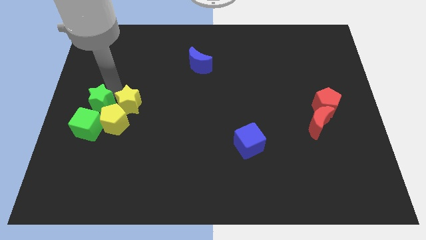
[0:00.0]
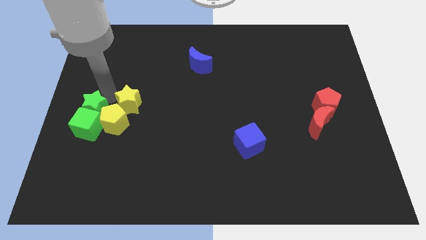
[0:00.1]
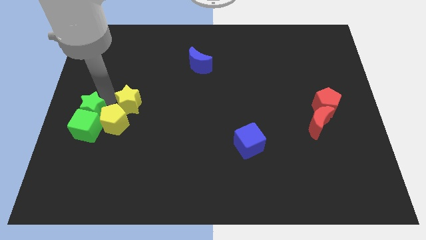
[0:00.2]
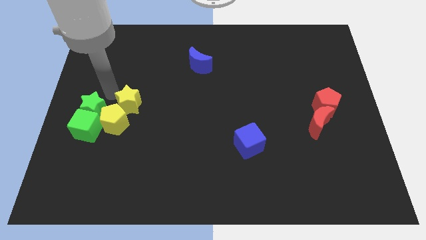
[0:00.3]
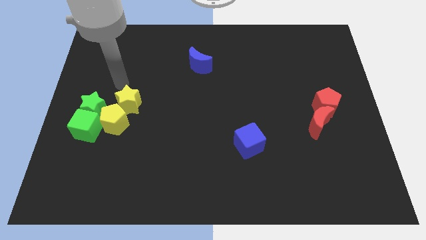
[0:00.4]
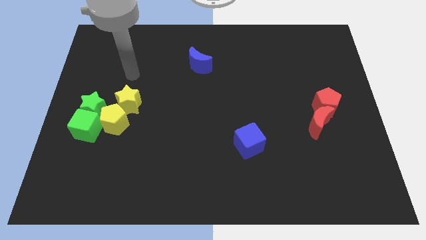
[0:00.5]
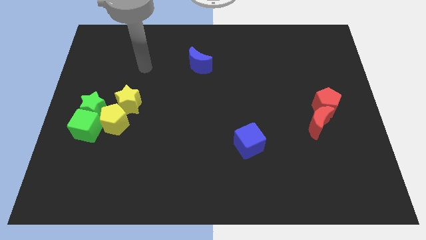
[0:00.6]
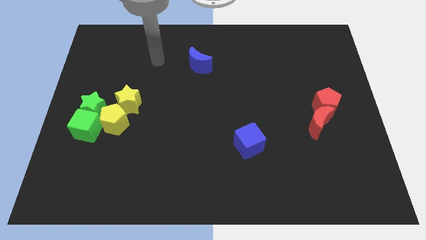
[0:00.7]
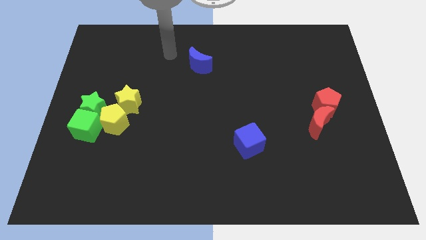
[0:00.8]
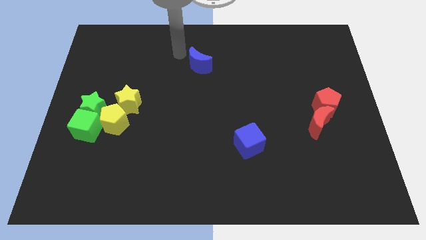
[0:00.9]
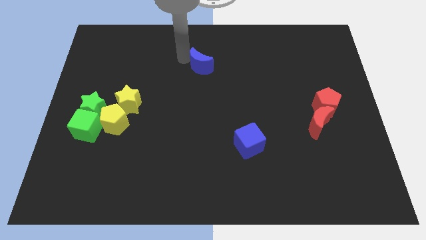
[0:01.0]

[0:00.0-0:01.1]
move your hand away from green star

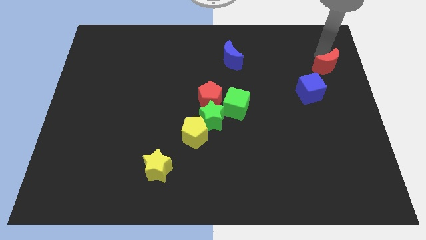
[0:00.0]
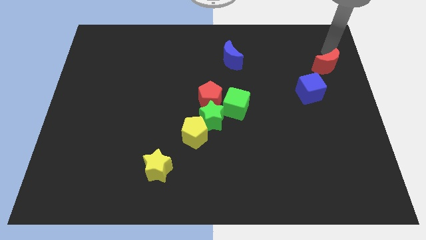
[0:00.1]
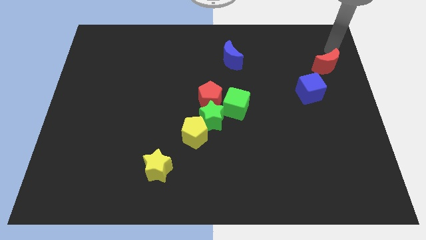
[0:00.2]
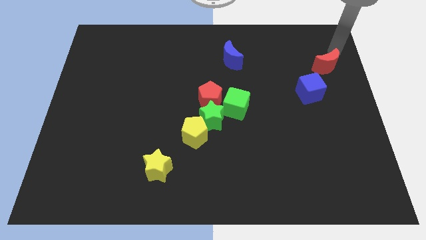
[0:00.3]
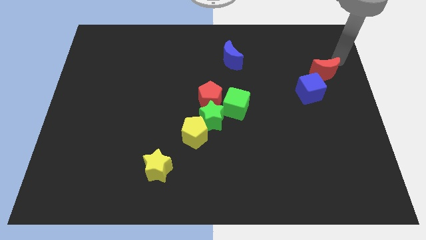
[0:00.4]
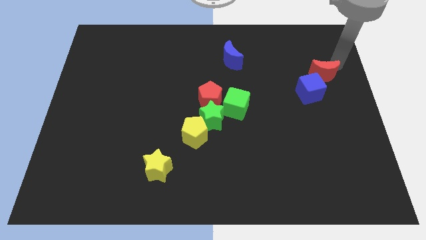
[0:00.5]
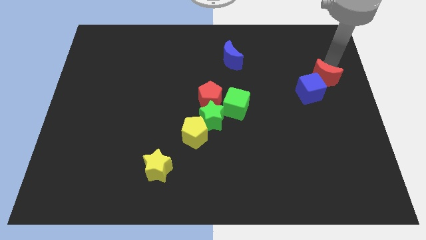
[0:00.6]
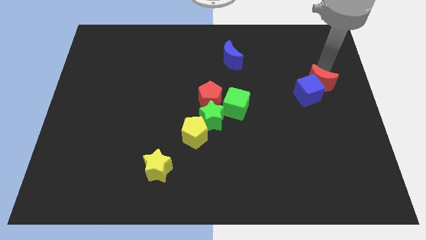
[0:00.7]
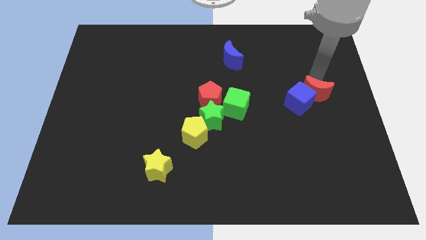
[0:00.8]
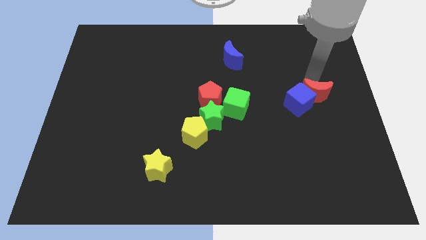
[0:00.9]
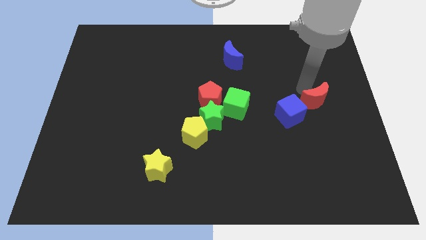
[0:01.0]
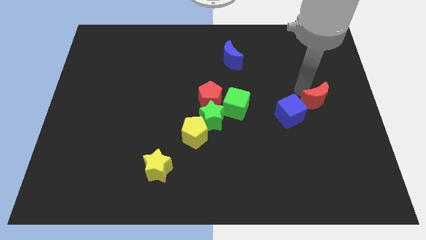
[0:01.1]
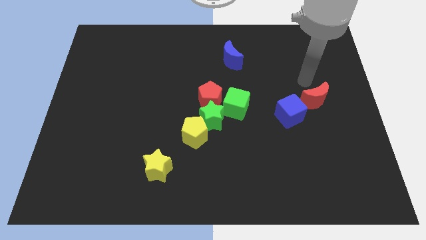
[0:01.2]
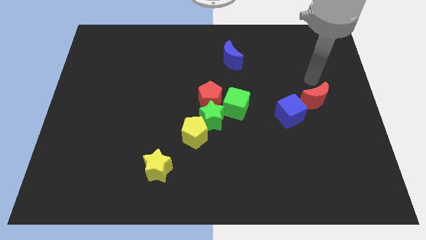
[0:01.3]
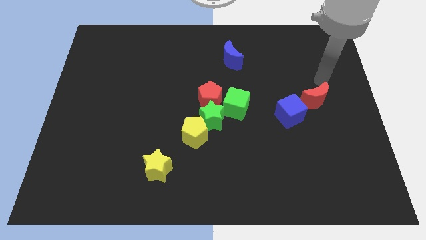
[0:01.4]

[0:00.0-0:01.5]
push the red moon in to the blue cube

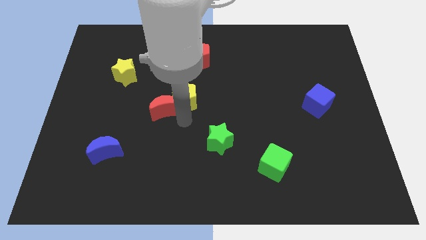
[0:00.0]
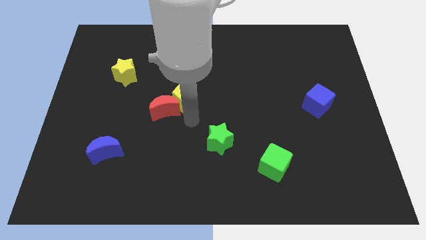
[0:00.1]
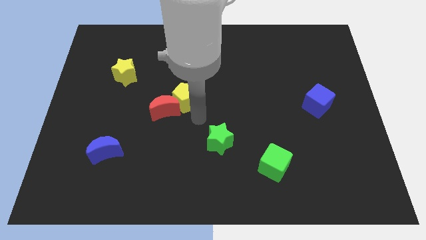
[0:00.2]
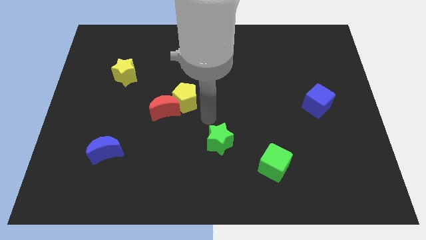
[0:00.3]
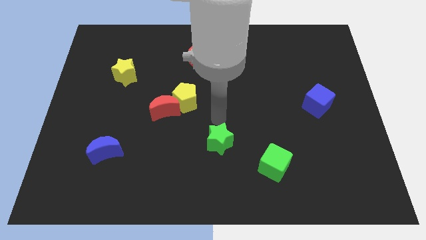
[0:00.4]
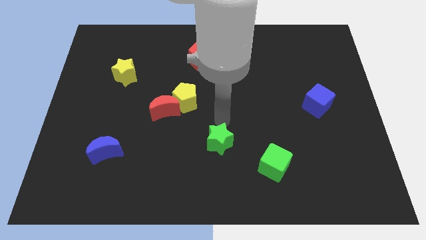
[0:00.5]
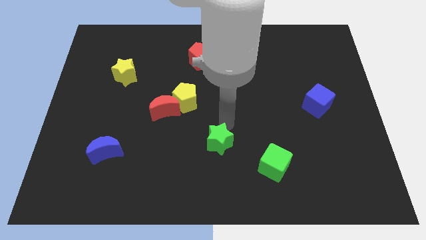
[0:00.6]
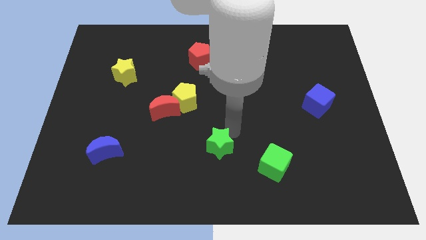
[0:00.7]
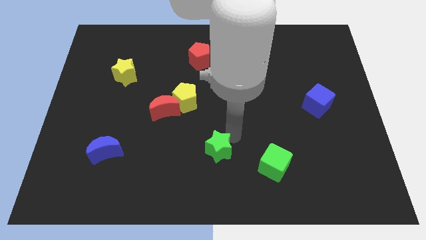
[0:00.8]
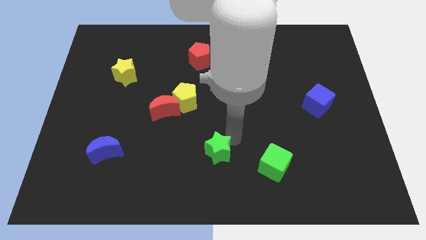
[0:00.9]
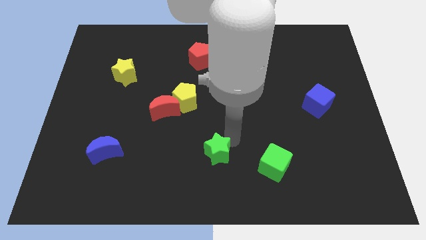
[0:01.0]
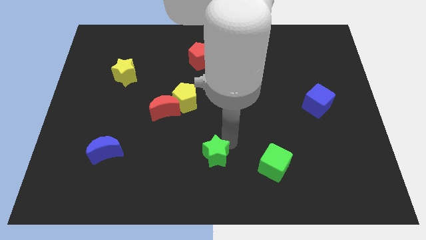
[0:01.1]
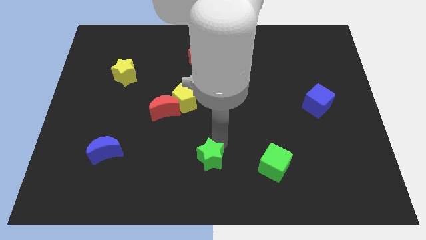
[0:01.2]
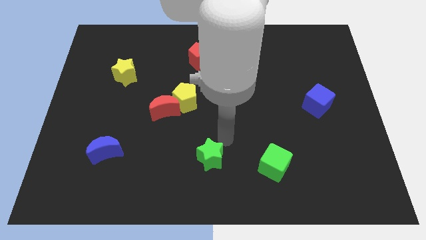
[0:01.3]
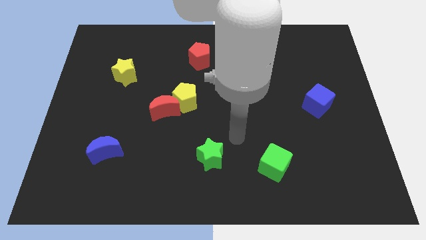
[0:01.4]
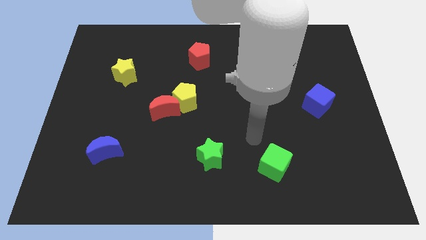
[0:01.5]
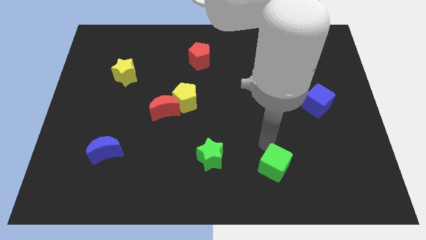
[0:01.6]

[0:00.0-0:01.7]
move your arm into the green star

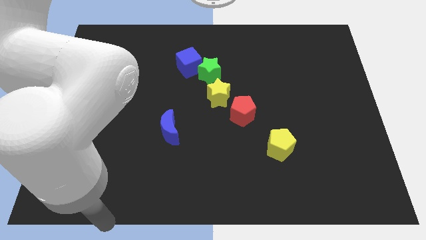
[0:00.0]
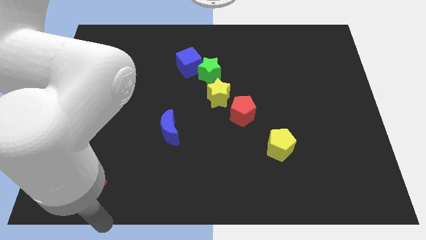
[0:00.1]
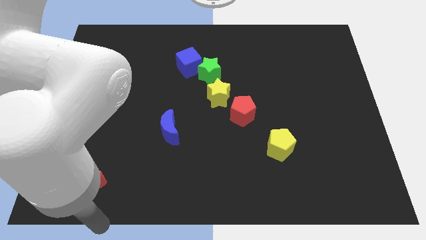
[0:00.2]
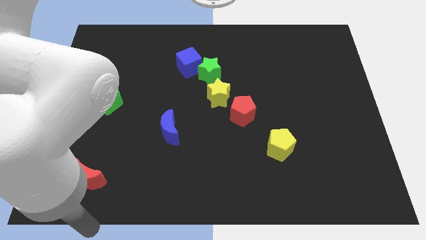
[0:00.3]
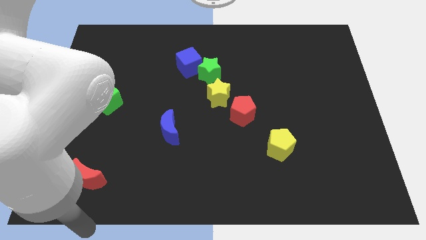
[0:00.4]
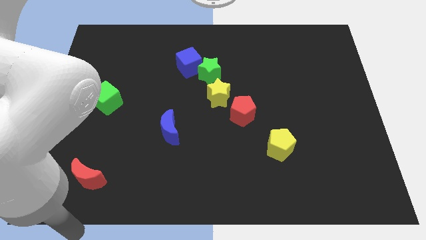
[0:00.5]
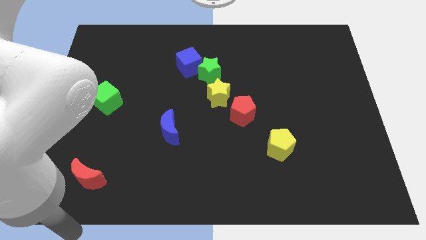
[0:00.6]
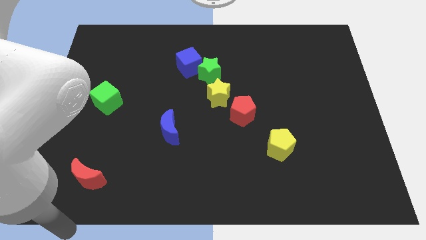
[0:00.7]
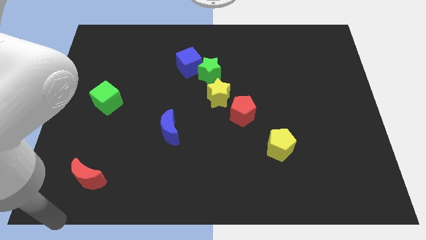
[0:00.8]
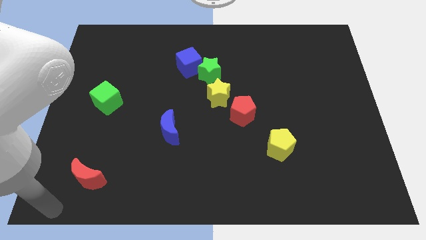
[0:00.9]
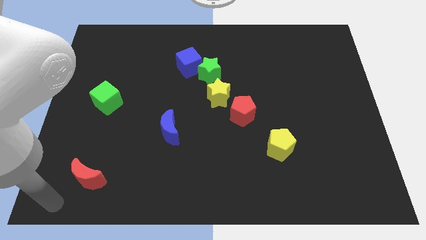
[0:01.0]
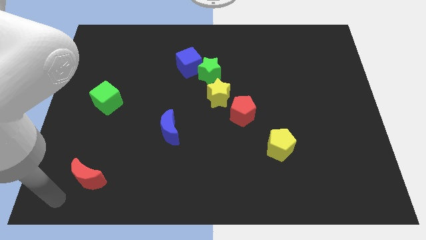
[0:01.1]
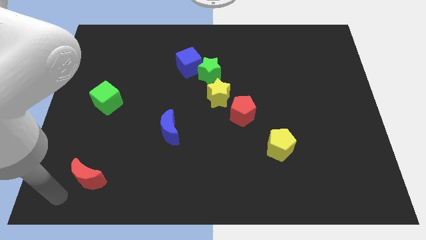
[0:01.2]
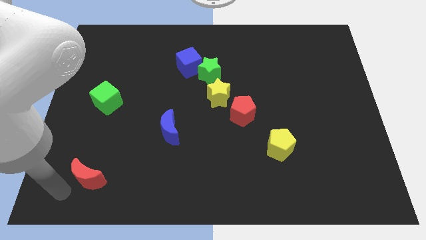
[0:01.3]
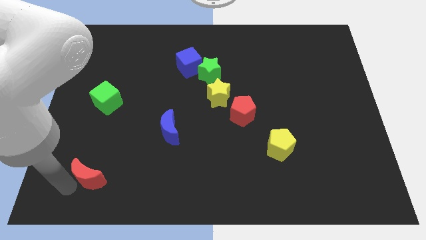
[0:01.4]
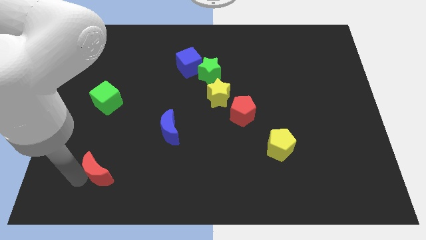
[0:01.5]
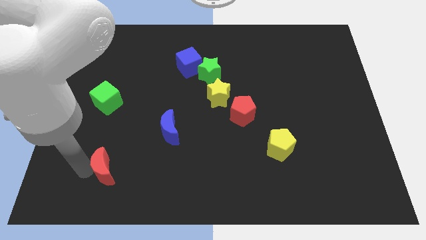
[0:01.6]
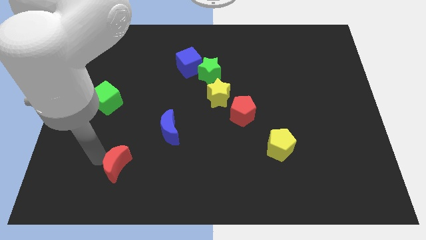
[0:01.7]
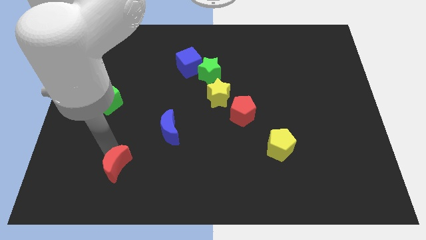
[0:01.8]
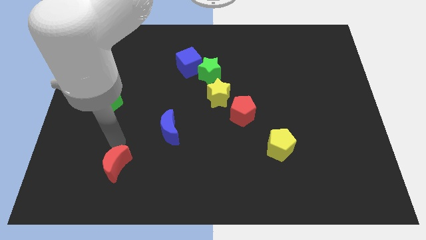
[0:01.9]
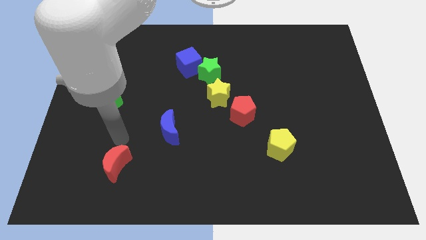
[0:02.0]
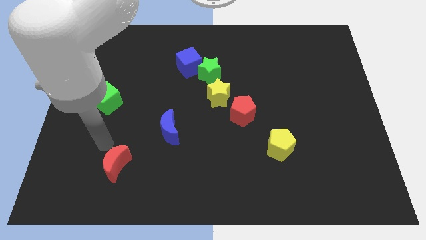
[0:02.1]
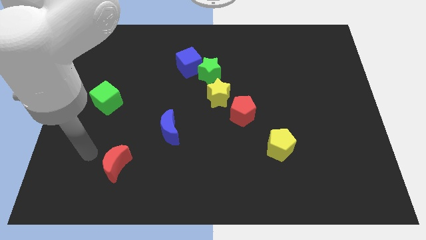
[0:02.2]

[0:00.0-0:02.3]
push the red moon diagonal below the blue moon

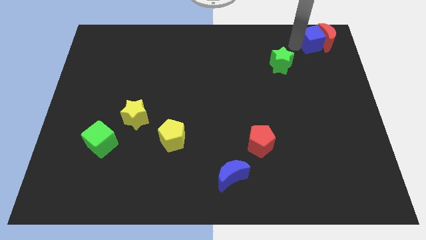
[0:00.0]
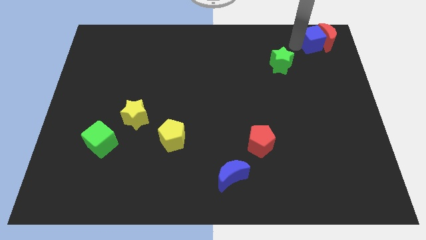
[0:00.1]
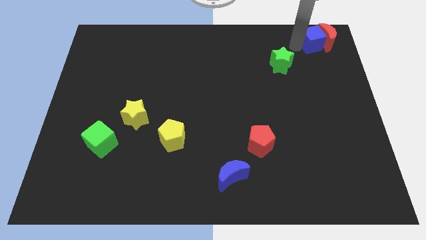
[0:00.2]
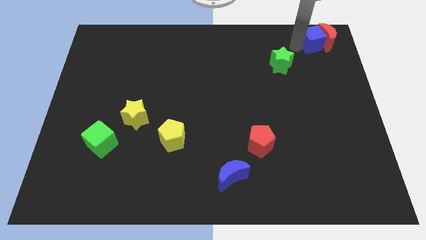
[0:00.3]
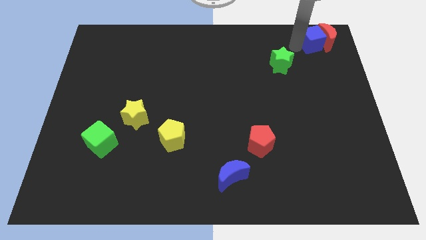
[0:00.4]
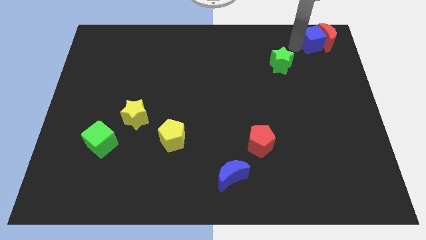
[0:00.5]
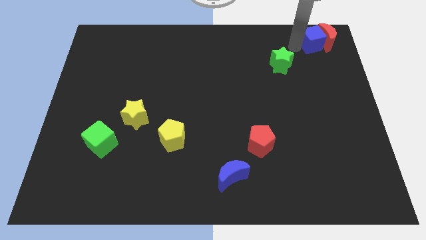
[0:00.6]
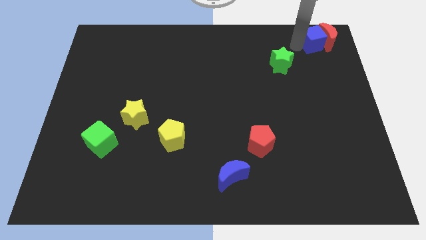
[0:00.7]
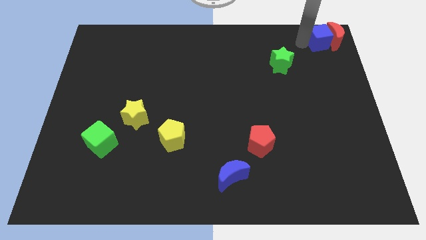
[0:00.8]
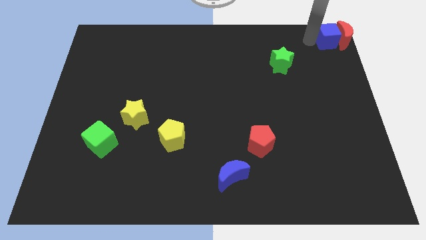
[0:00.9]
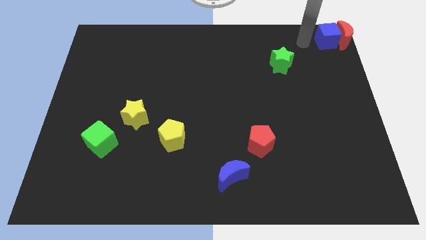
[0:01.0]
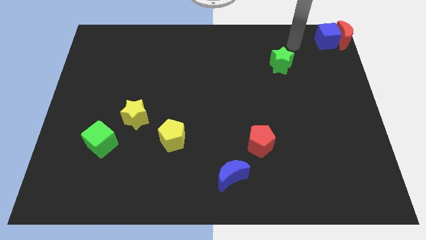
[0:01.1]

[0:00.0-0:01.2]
push the red moon and the blue cube to the top right corner of the board

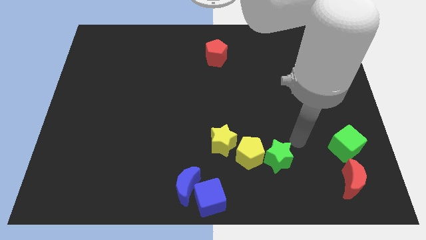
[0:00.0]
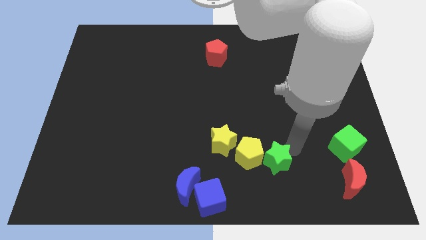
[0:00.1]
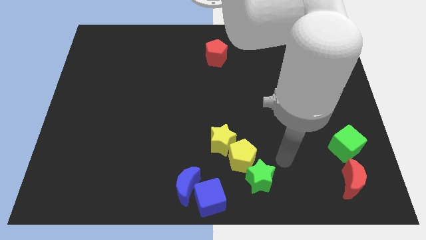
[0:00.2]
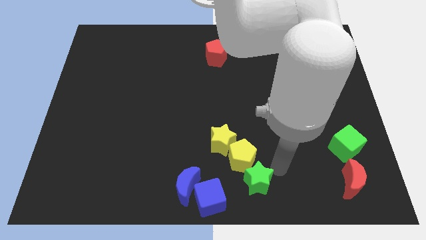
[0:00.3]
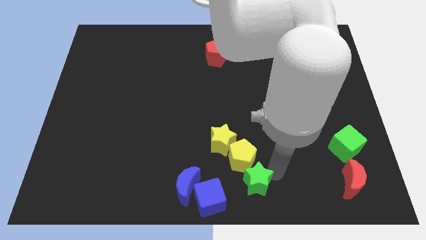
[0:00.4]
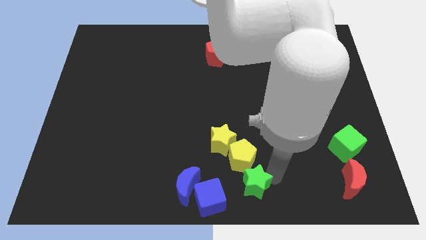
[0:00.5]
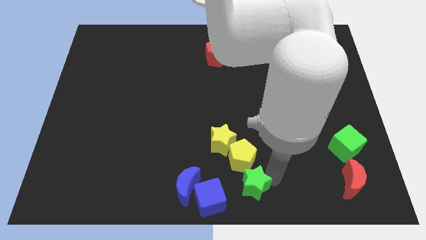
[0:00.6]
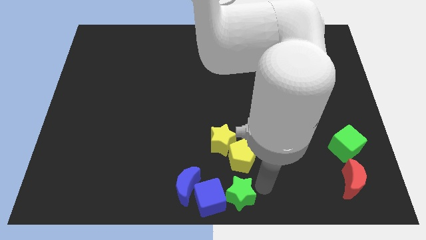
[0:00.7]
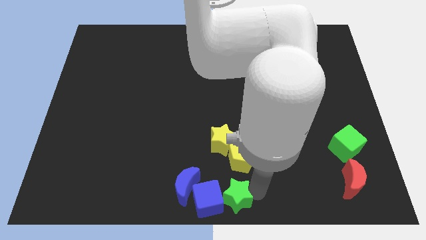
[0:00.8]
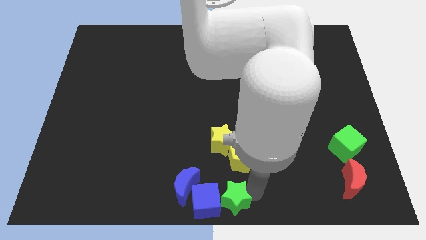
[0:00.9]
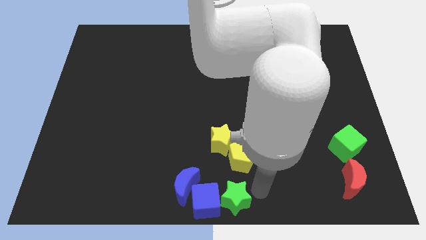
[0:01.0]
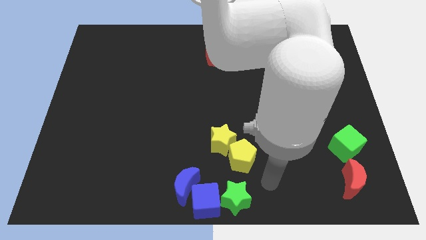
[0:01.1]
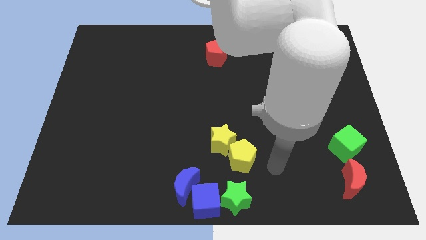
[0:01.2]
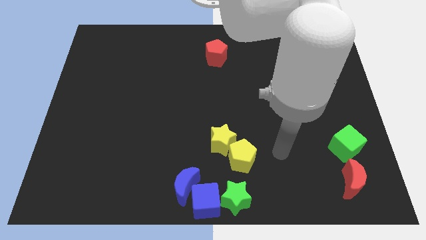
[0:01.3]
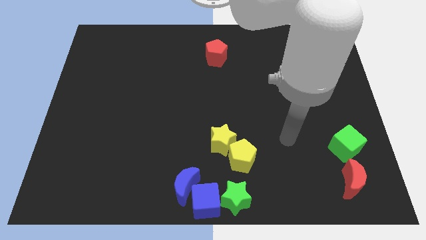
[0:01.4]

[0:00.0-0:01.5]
put the green star into the blue cube
